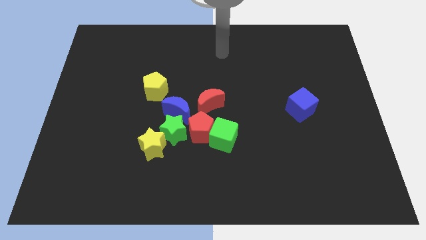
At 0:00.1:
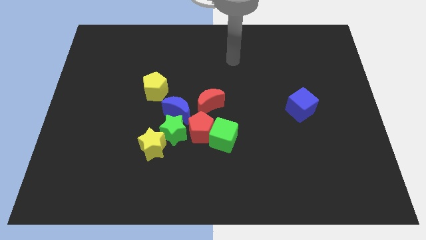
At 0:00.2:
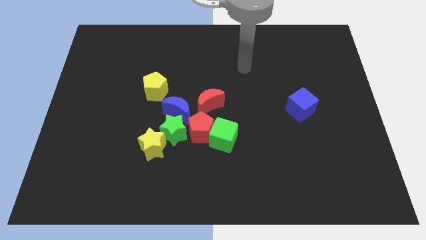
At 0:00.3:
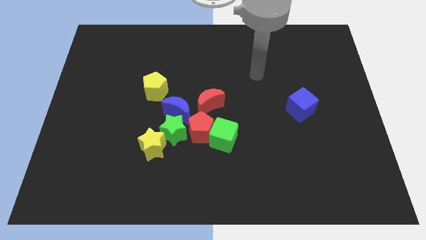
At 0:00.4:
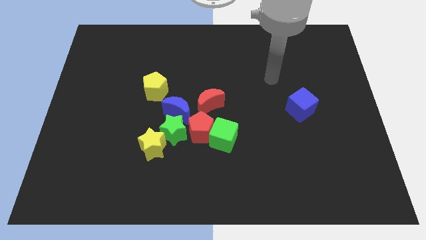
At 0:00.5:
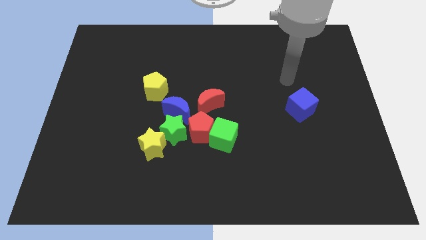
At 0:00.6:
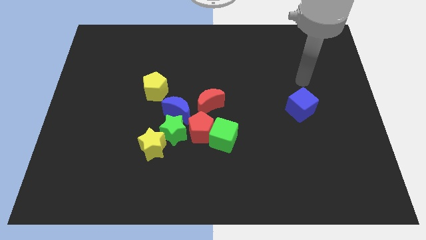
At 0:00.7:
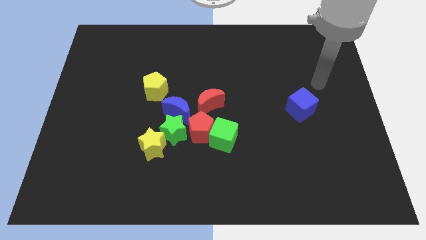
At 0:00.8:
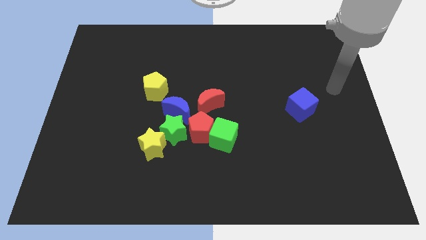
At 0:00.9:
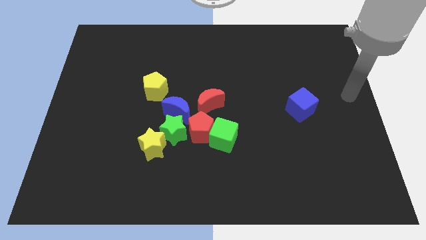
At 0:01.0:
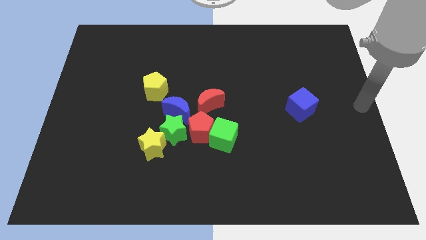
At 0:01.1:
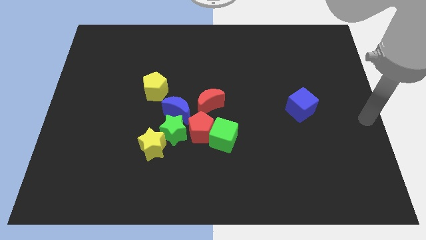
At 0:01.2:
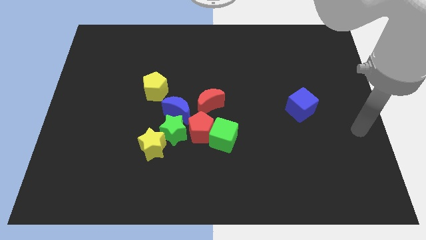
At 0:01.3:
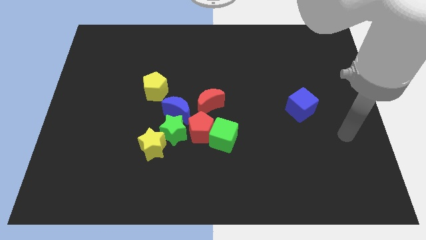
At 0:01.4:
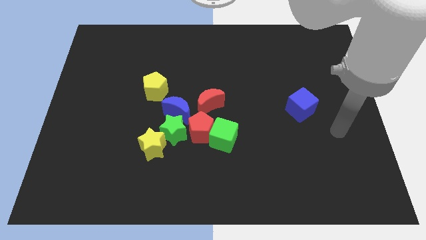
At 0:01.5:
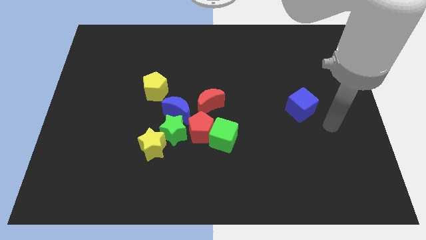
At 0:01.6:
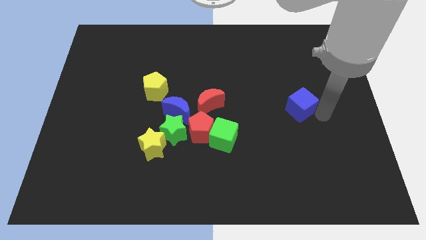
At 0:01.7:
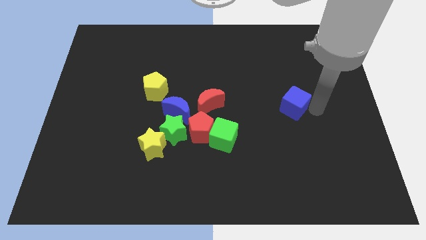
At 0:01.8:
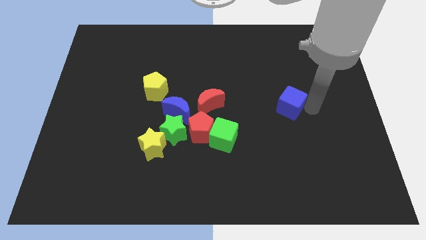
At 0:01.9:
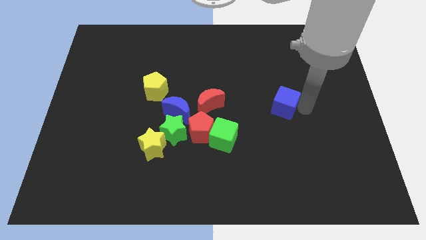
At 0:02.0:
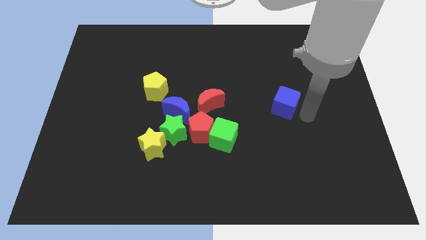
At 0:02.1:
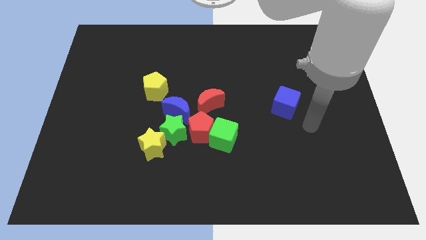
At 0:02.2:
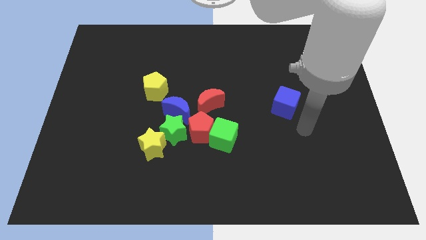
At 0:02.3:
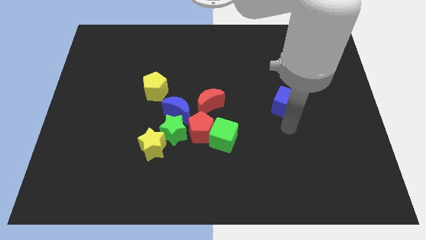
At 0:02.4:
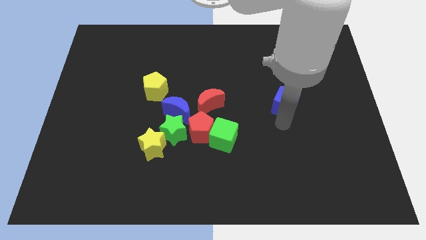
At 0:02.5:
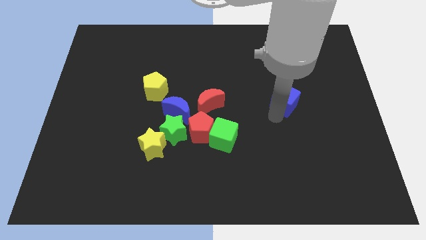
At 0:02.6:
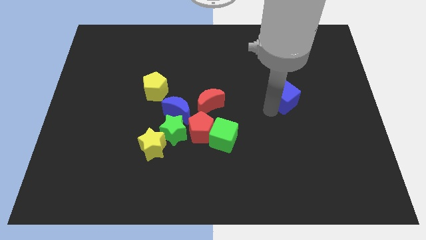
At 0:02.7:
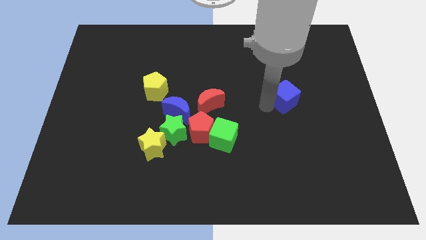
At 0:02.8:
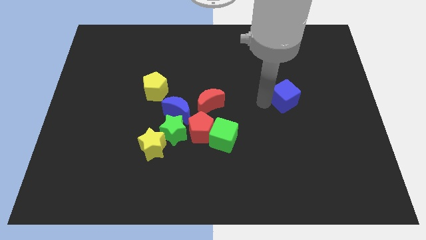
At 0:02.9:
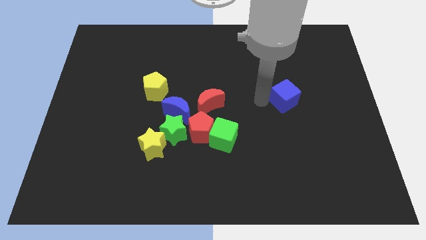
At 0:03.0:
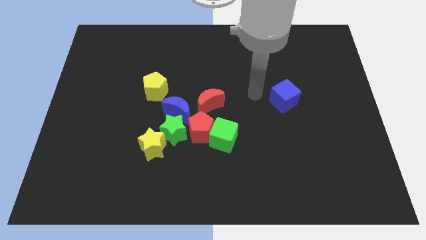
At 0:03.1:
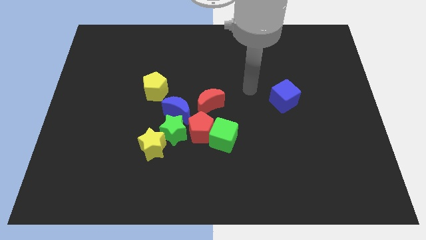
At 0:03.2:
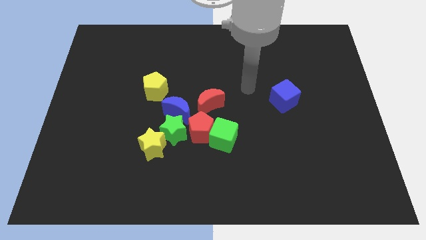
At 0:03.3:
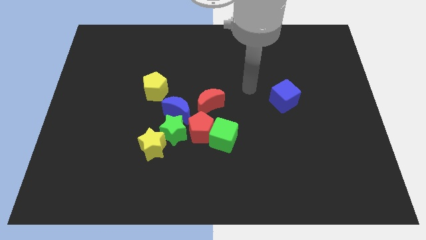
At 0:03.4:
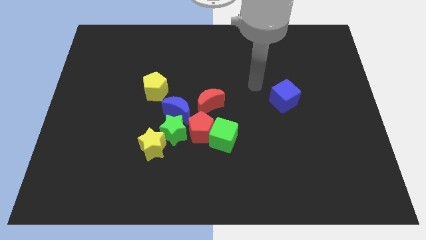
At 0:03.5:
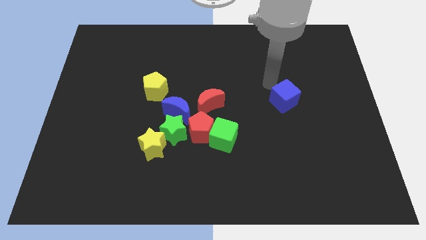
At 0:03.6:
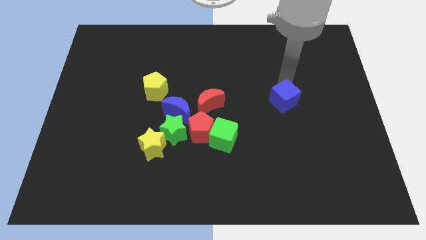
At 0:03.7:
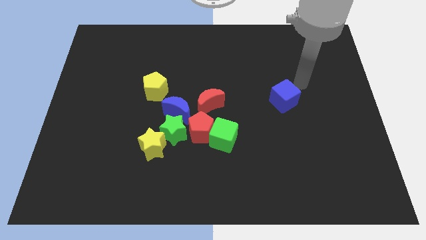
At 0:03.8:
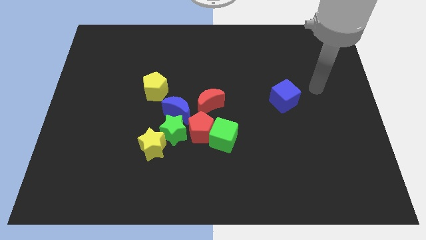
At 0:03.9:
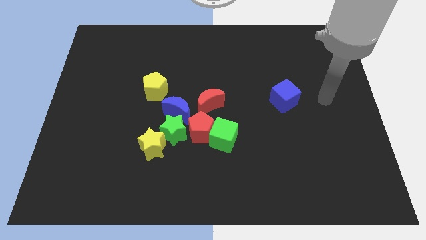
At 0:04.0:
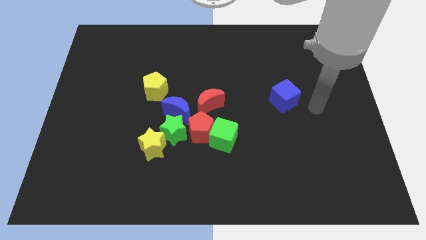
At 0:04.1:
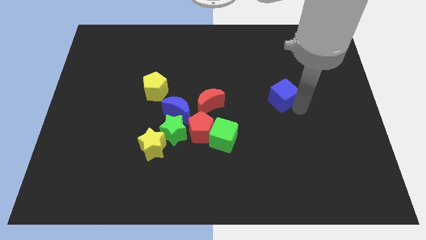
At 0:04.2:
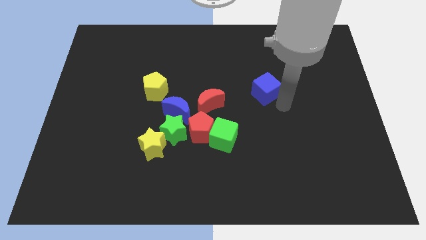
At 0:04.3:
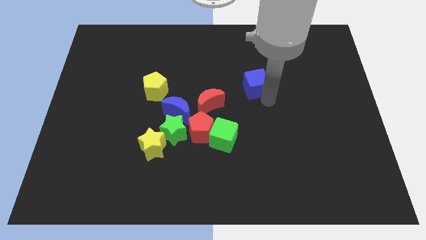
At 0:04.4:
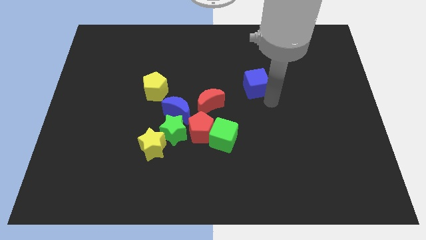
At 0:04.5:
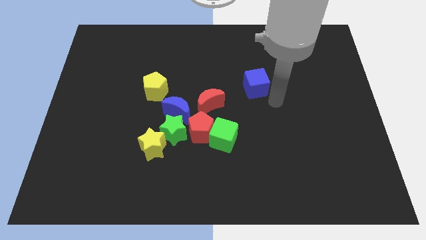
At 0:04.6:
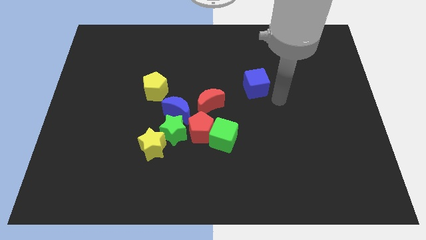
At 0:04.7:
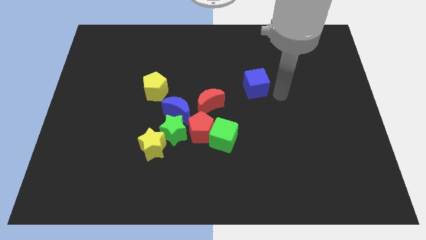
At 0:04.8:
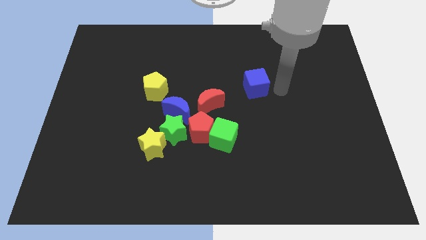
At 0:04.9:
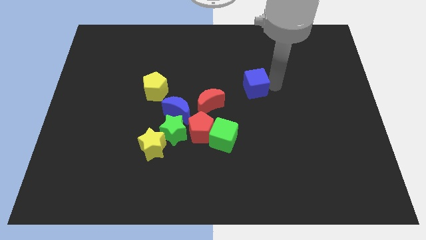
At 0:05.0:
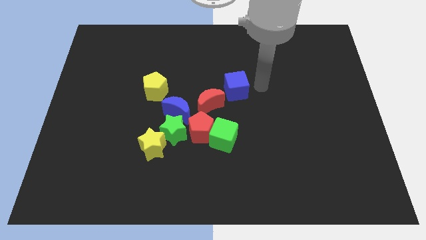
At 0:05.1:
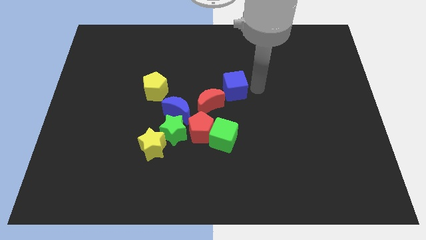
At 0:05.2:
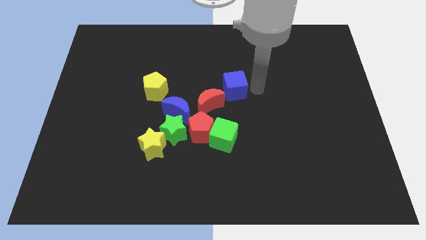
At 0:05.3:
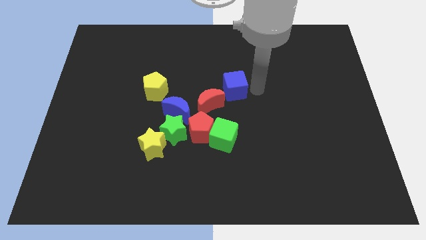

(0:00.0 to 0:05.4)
move the blue cube close to the red moon

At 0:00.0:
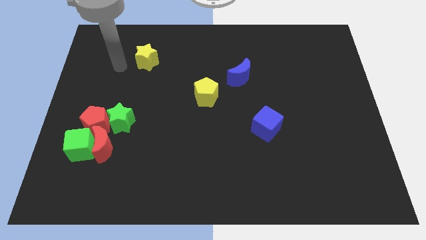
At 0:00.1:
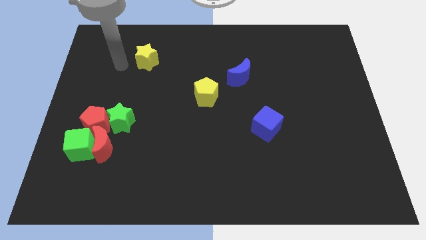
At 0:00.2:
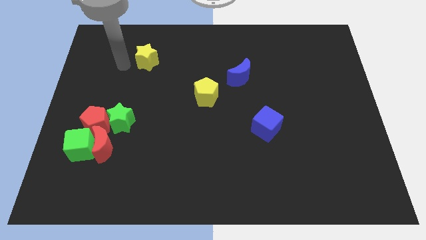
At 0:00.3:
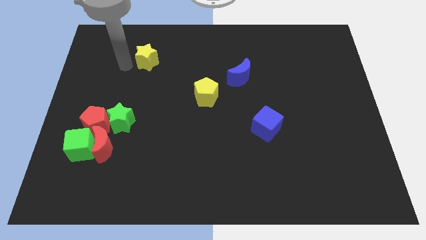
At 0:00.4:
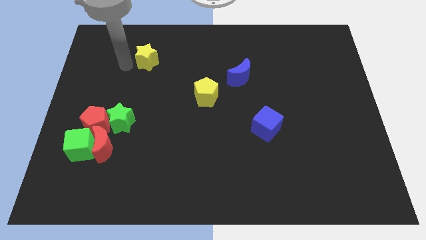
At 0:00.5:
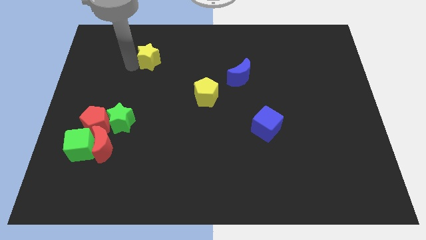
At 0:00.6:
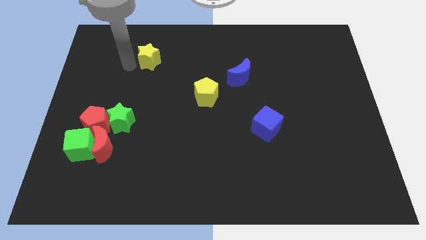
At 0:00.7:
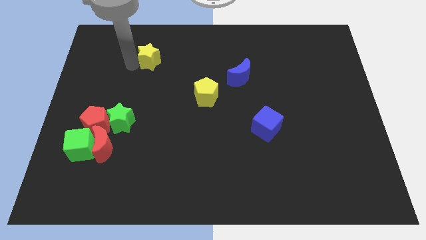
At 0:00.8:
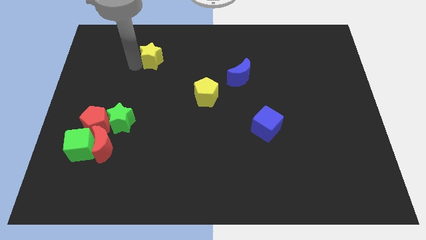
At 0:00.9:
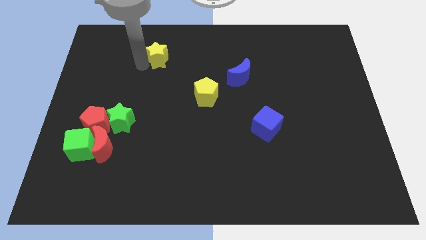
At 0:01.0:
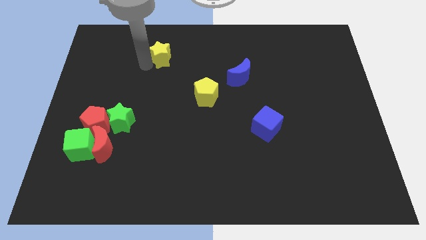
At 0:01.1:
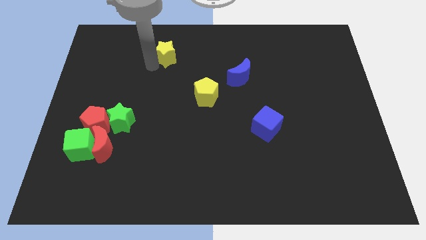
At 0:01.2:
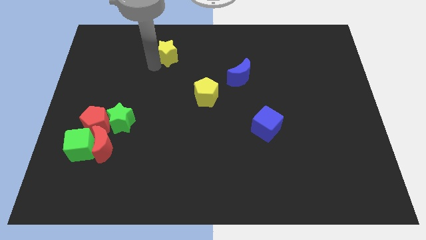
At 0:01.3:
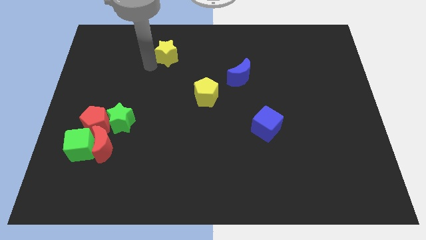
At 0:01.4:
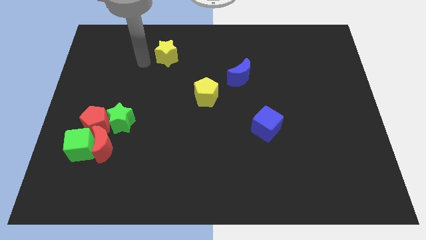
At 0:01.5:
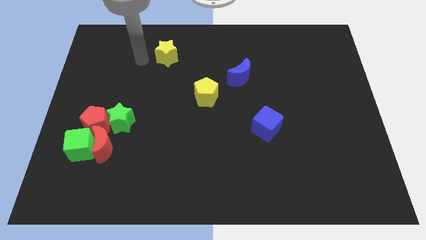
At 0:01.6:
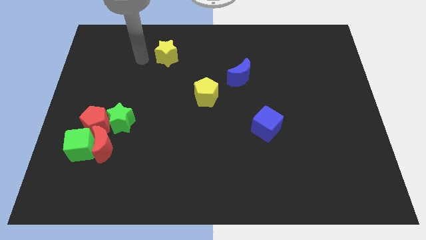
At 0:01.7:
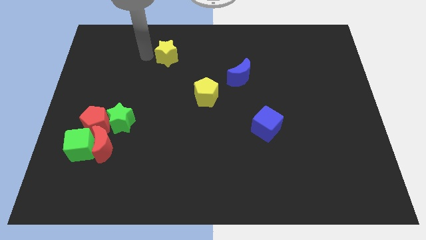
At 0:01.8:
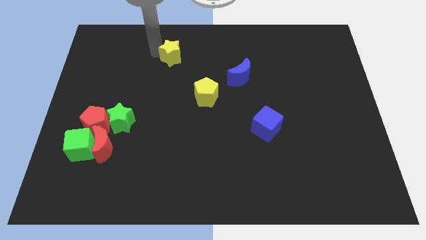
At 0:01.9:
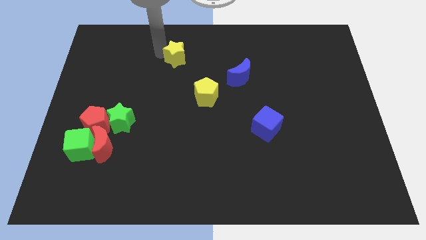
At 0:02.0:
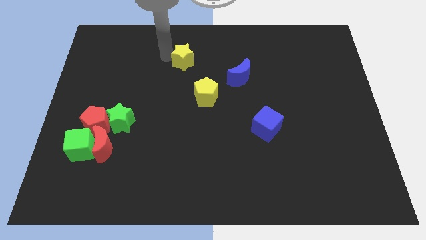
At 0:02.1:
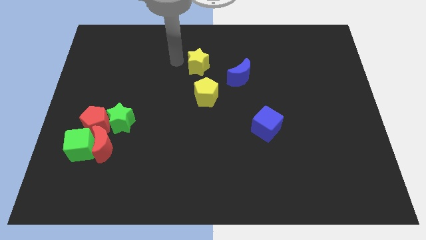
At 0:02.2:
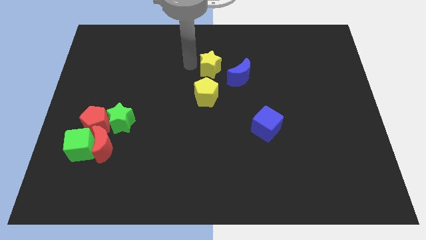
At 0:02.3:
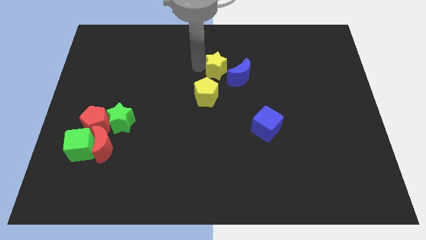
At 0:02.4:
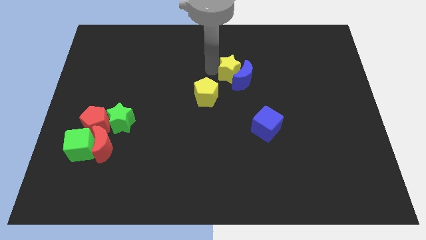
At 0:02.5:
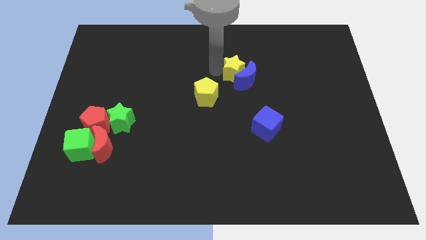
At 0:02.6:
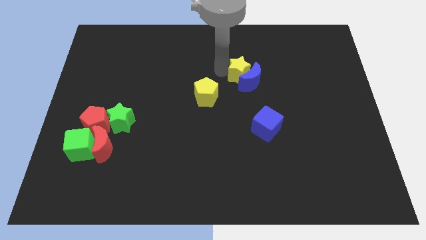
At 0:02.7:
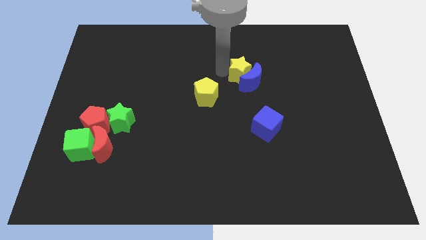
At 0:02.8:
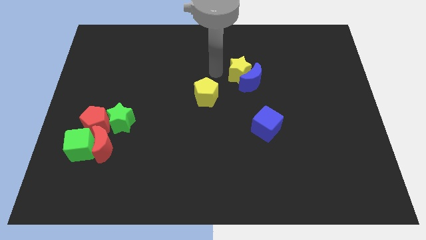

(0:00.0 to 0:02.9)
place yellow star beside blue crescent

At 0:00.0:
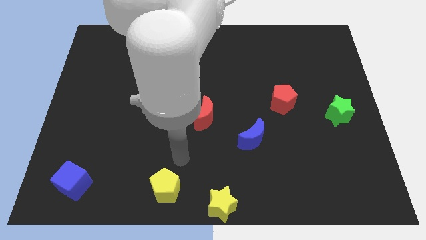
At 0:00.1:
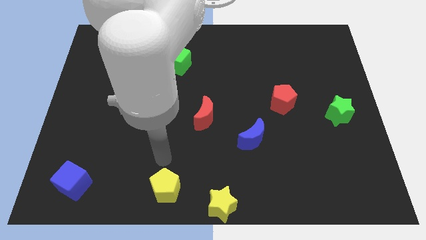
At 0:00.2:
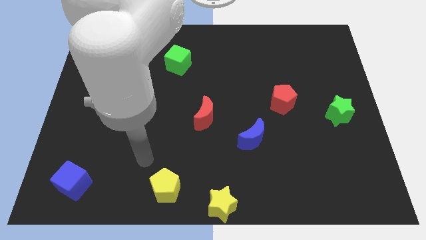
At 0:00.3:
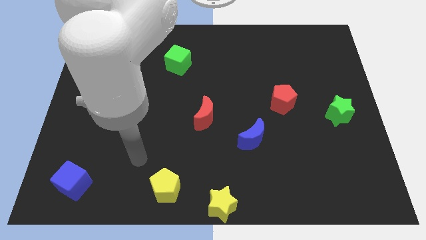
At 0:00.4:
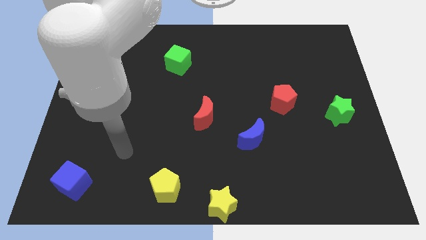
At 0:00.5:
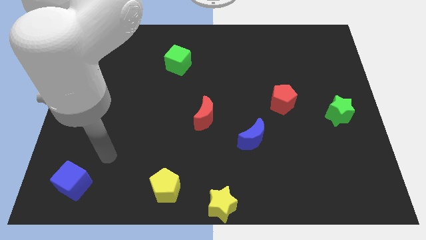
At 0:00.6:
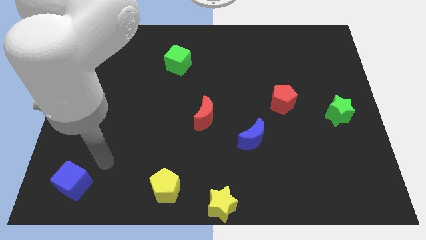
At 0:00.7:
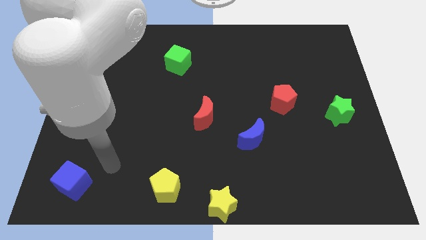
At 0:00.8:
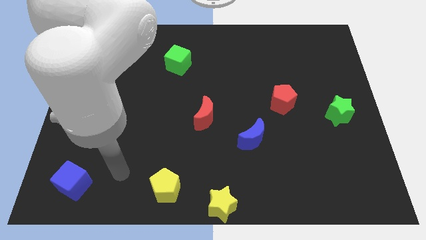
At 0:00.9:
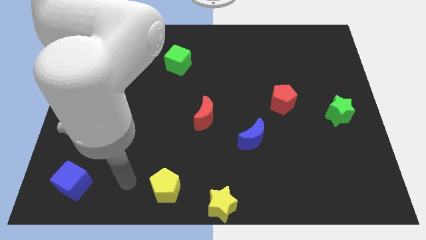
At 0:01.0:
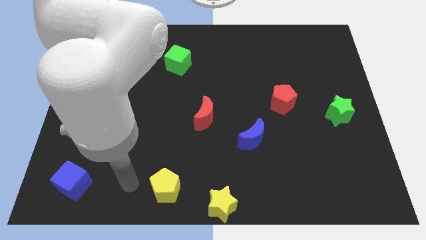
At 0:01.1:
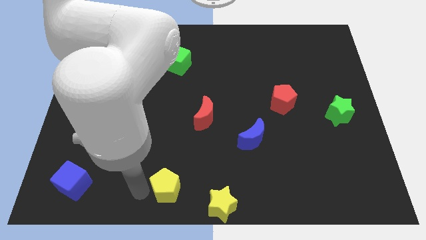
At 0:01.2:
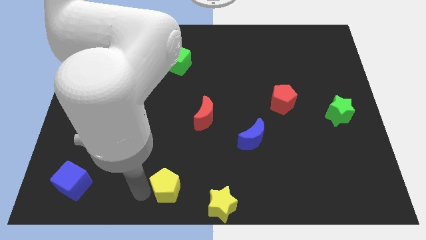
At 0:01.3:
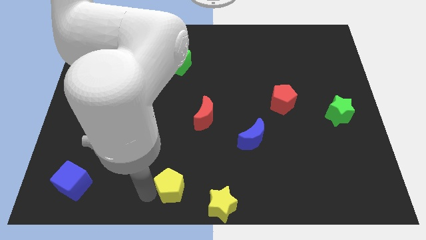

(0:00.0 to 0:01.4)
point your arm at the left side of the yellow pentagon
